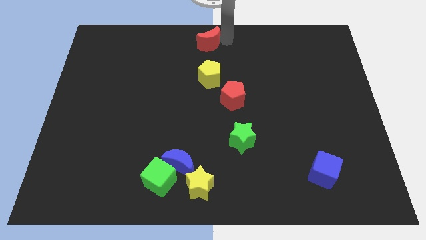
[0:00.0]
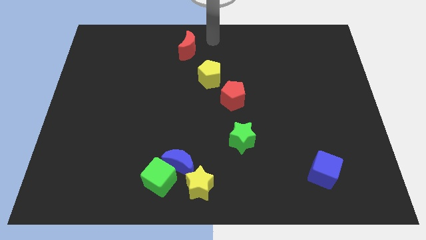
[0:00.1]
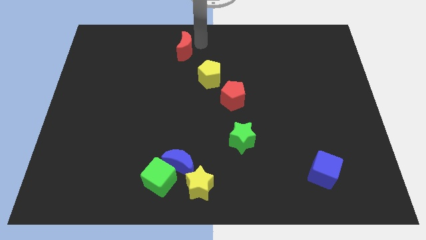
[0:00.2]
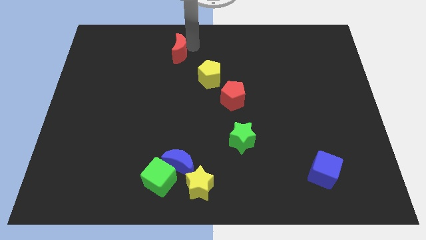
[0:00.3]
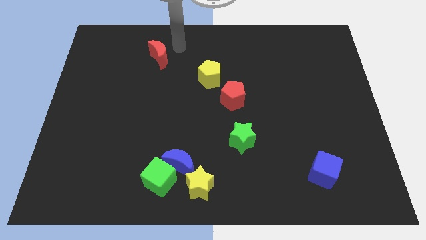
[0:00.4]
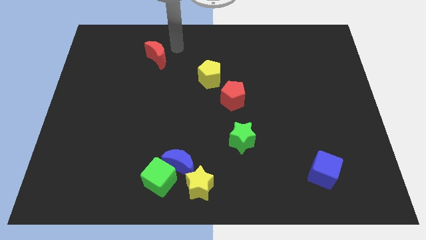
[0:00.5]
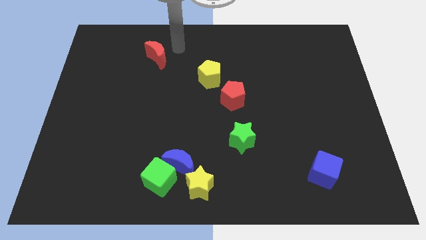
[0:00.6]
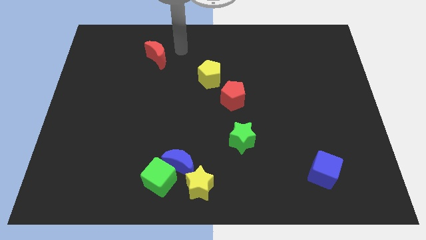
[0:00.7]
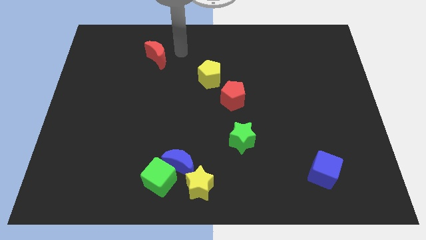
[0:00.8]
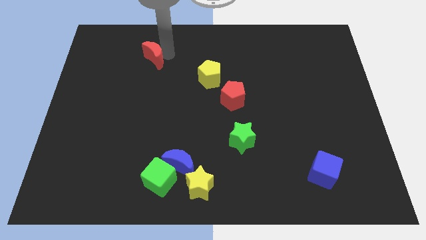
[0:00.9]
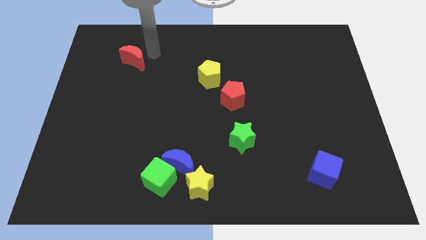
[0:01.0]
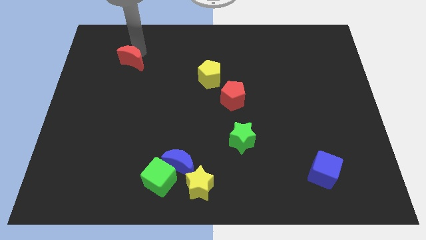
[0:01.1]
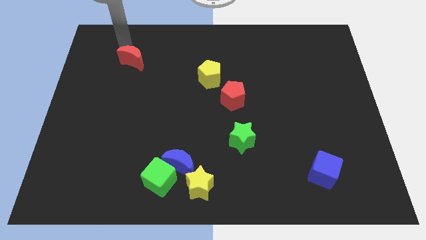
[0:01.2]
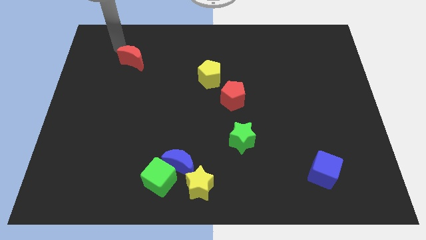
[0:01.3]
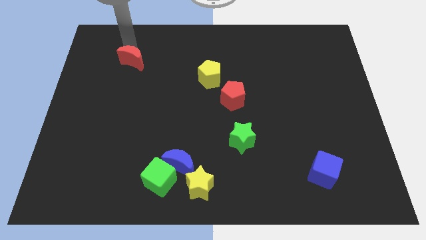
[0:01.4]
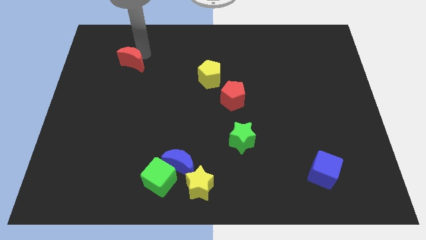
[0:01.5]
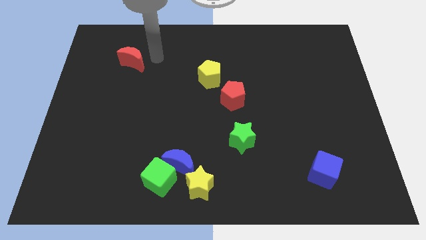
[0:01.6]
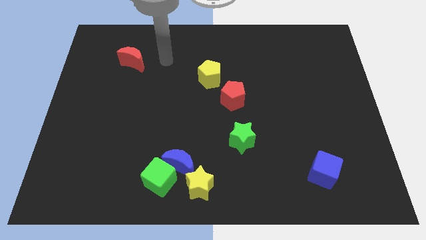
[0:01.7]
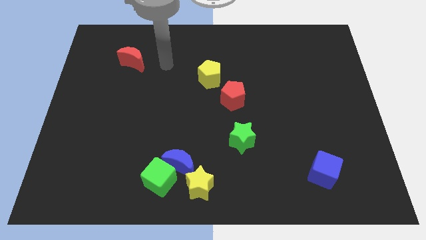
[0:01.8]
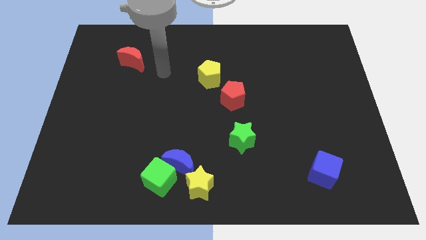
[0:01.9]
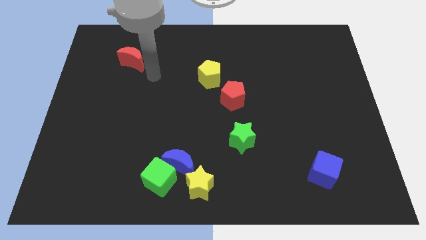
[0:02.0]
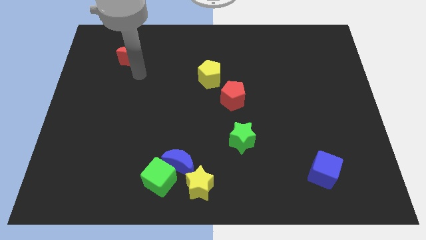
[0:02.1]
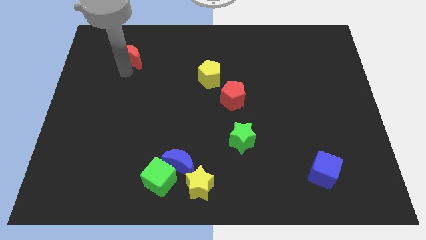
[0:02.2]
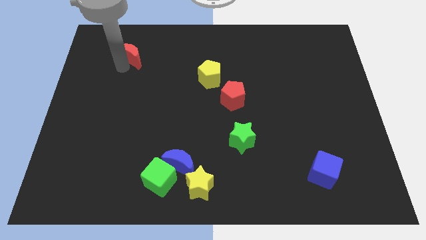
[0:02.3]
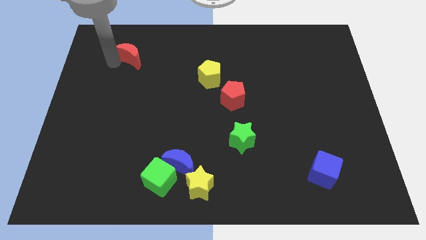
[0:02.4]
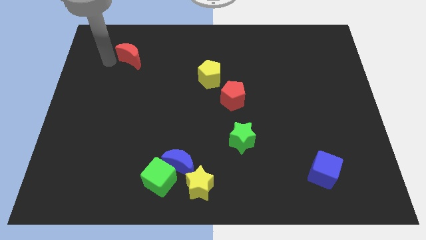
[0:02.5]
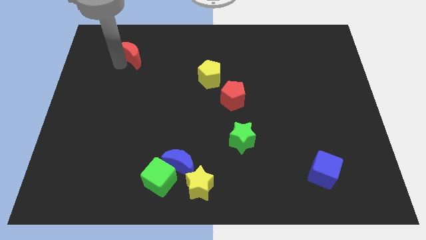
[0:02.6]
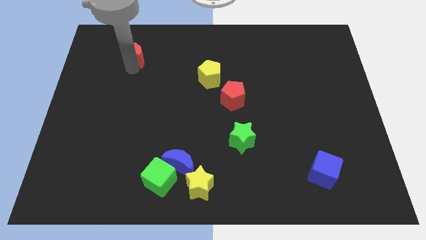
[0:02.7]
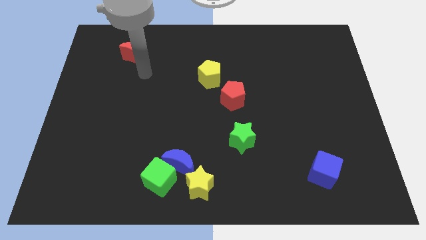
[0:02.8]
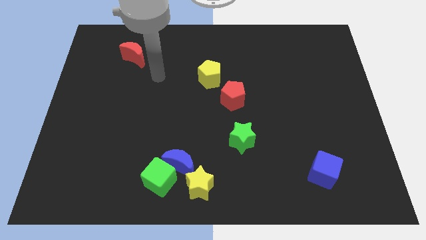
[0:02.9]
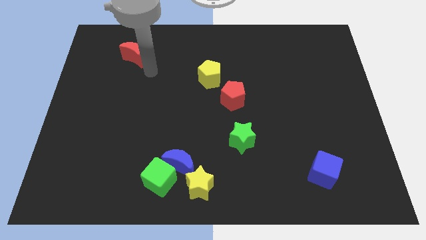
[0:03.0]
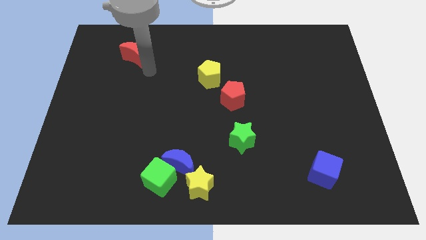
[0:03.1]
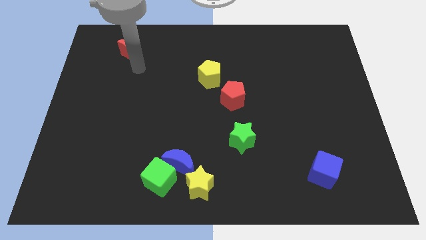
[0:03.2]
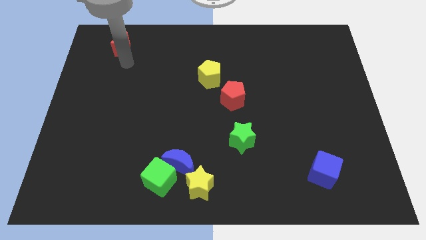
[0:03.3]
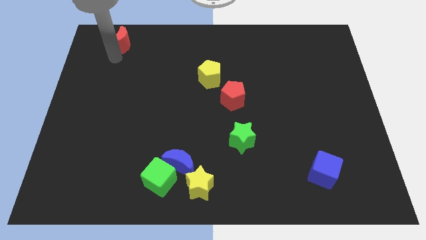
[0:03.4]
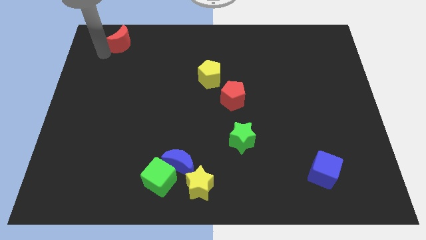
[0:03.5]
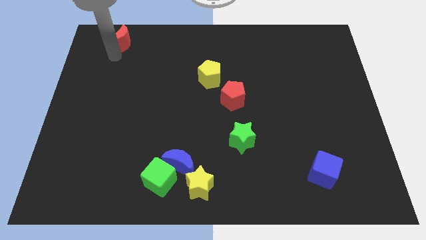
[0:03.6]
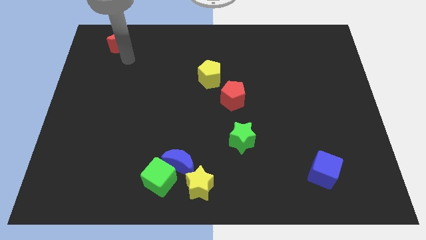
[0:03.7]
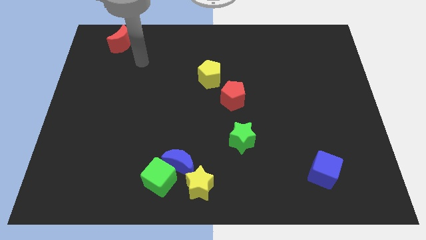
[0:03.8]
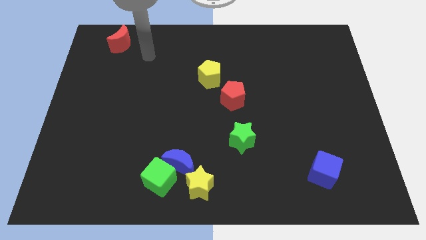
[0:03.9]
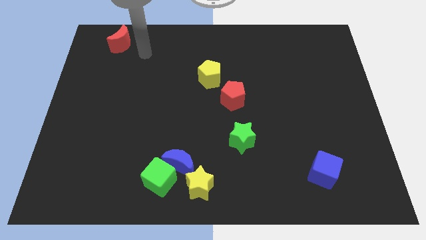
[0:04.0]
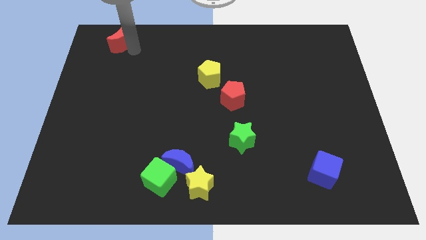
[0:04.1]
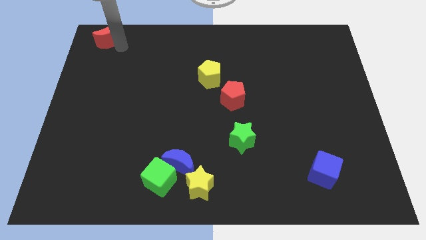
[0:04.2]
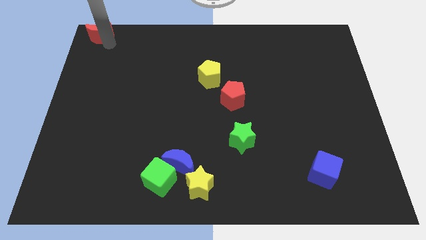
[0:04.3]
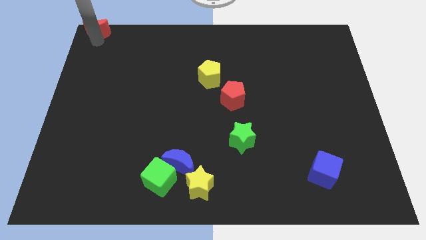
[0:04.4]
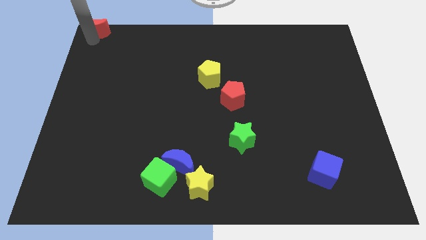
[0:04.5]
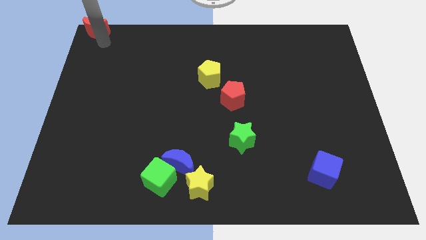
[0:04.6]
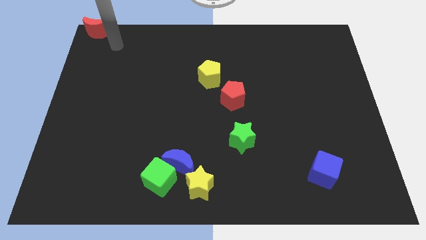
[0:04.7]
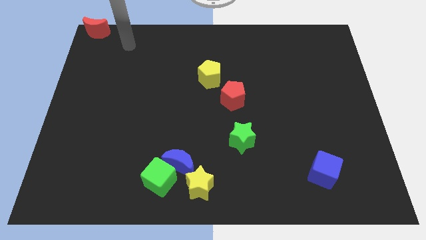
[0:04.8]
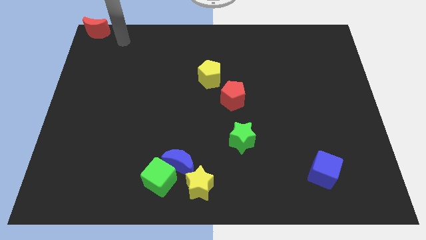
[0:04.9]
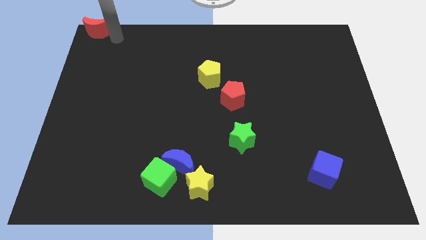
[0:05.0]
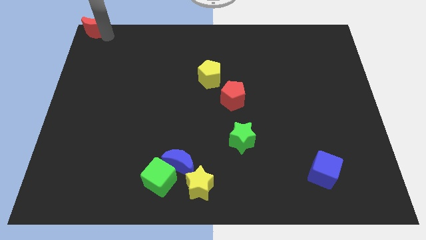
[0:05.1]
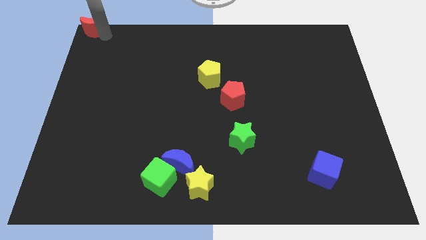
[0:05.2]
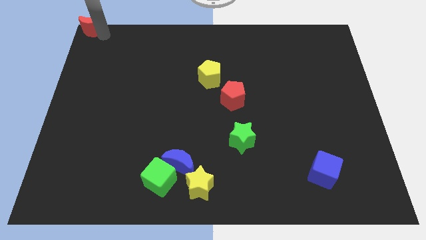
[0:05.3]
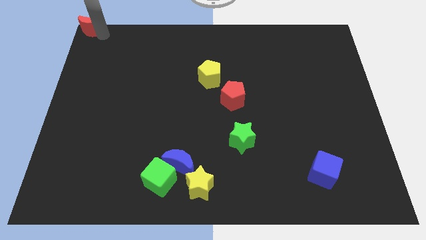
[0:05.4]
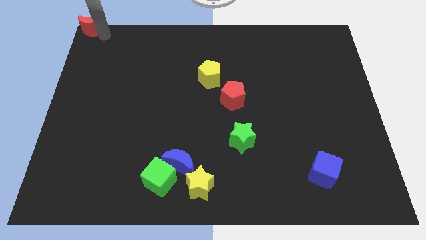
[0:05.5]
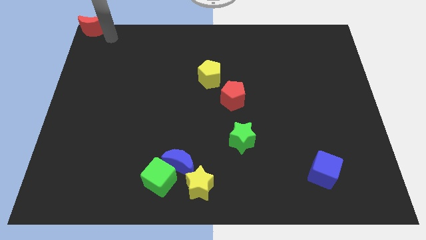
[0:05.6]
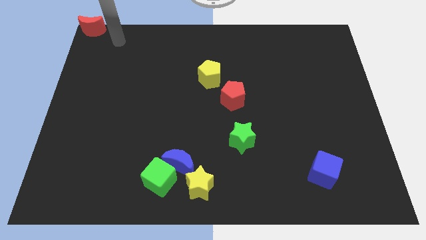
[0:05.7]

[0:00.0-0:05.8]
push the red moon to the top left corner

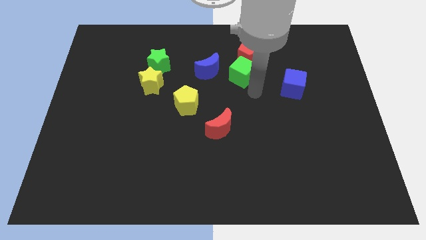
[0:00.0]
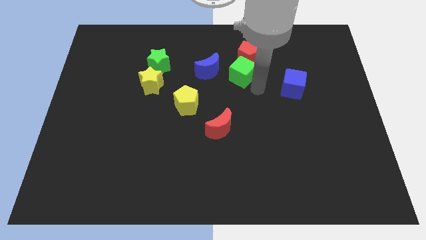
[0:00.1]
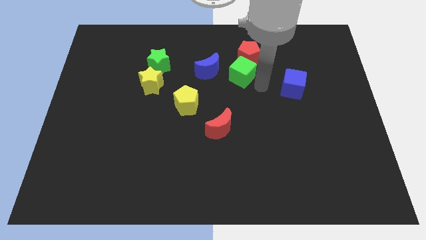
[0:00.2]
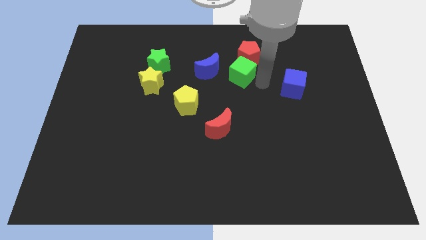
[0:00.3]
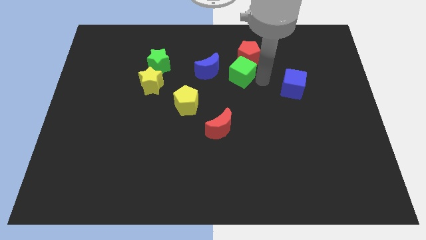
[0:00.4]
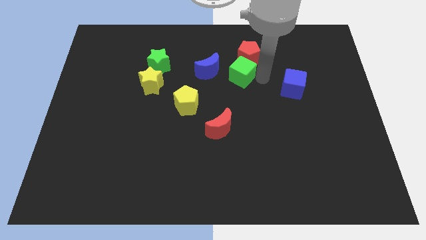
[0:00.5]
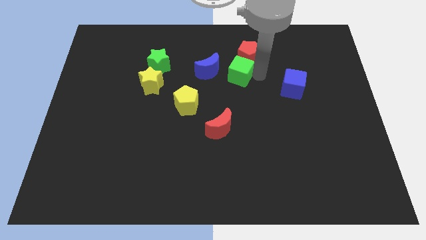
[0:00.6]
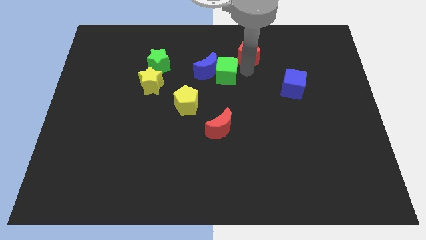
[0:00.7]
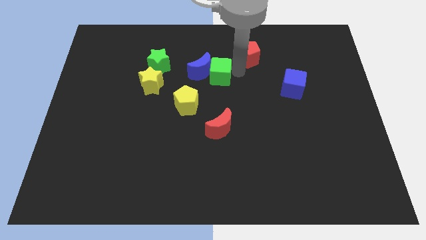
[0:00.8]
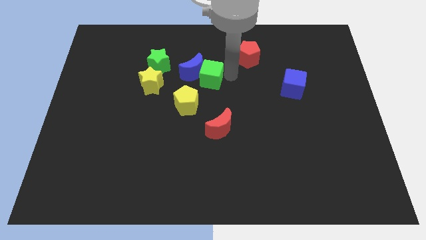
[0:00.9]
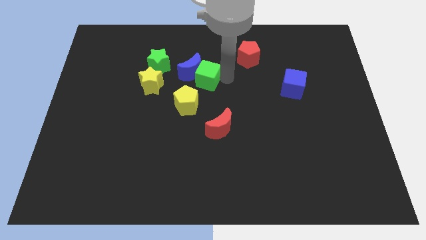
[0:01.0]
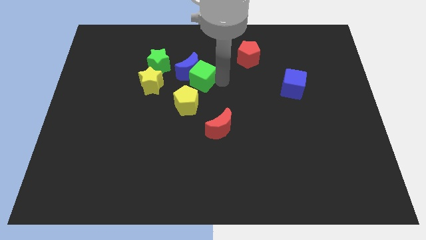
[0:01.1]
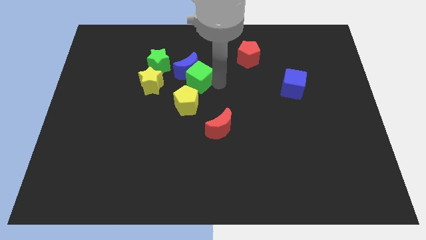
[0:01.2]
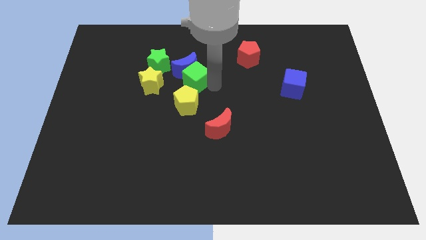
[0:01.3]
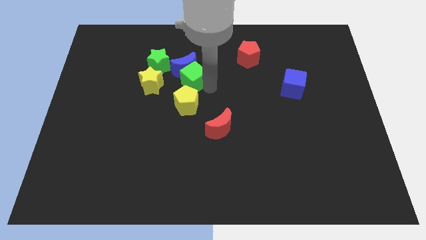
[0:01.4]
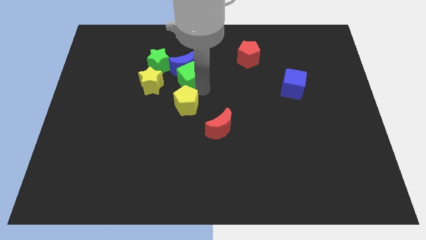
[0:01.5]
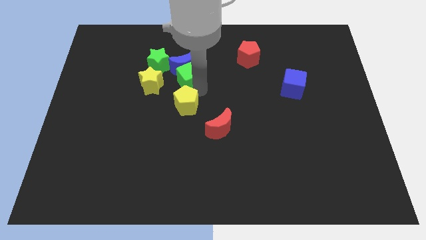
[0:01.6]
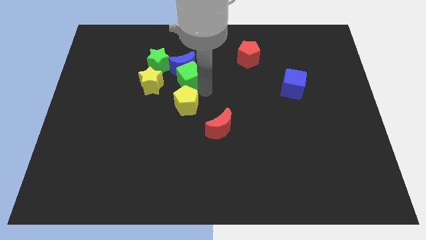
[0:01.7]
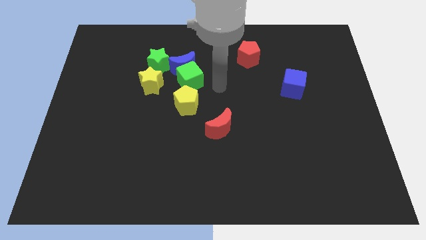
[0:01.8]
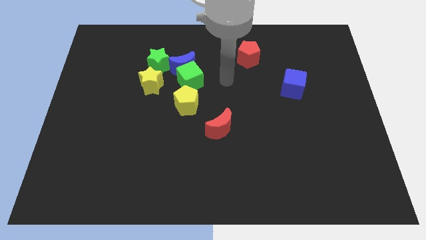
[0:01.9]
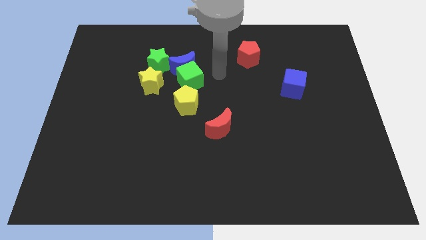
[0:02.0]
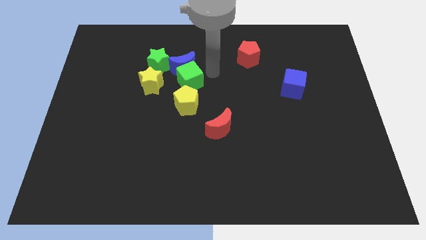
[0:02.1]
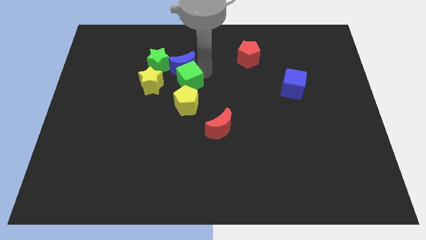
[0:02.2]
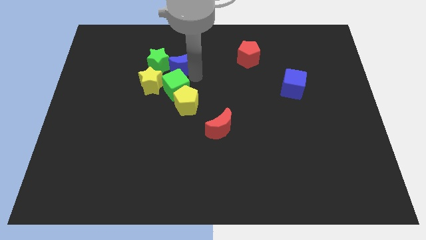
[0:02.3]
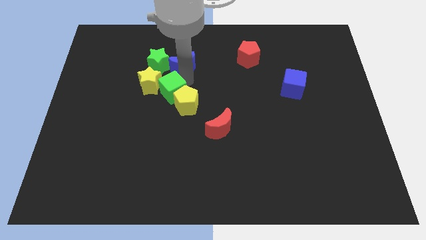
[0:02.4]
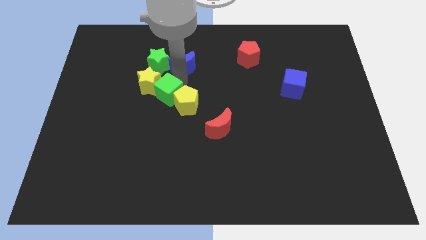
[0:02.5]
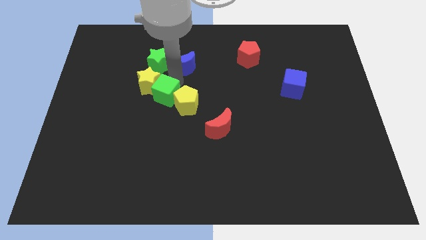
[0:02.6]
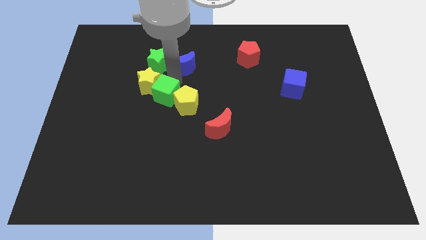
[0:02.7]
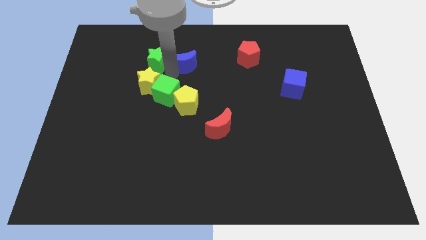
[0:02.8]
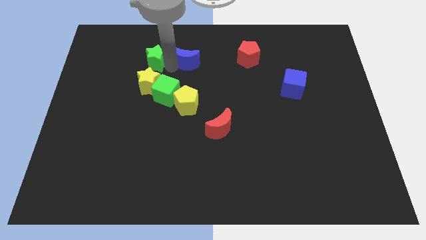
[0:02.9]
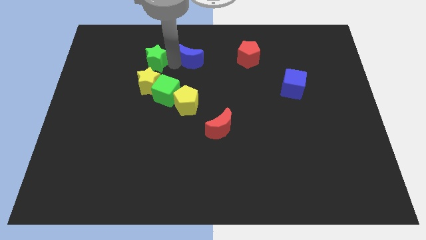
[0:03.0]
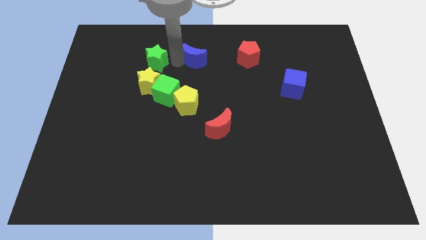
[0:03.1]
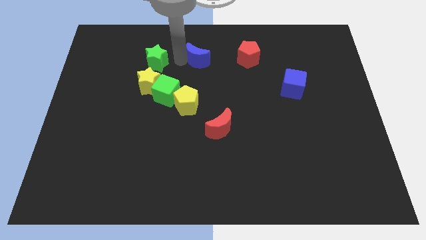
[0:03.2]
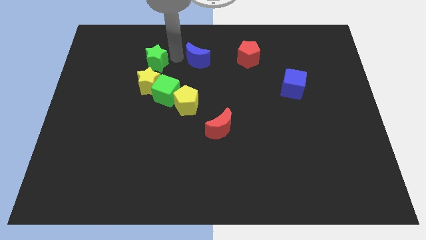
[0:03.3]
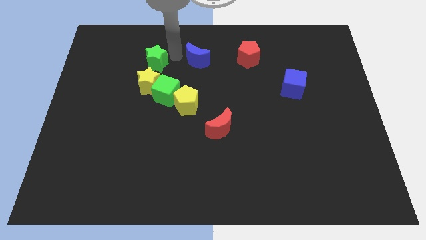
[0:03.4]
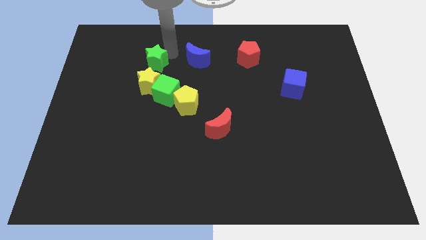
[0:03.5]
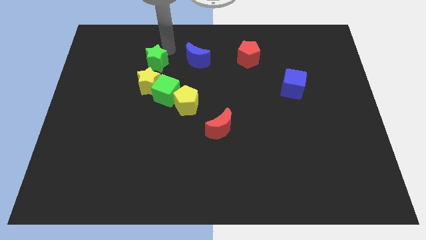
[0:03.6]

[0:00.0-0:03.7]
place the green cube in between the yellow blocks
